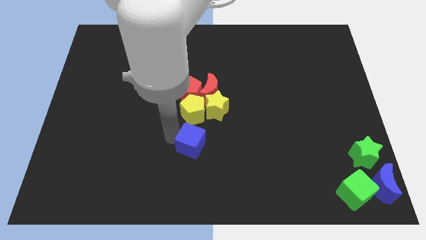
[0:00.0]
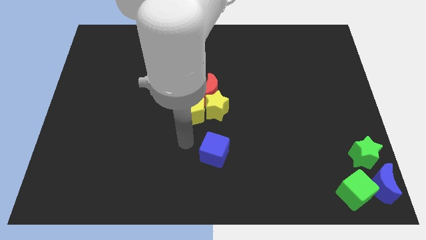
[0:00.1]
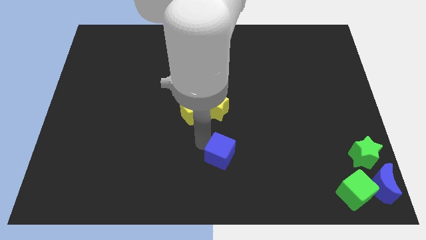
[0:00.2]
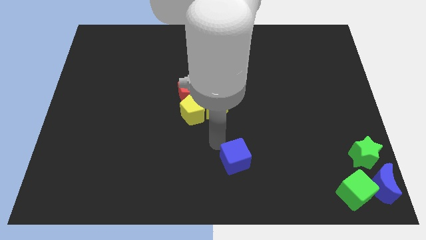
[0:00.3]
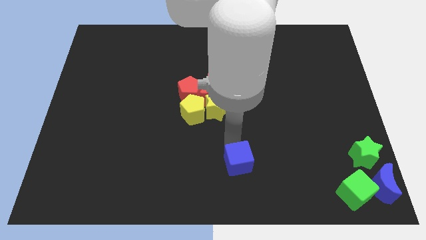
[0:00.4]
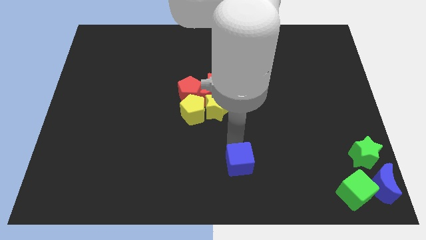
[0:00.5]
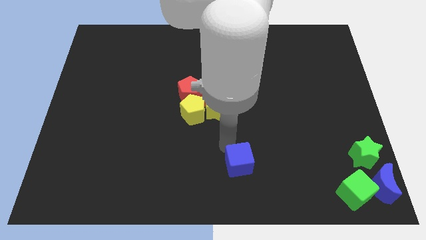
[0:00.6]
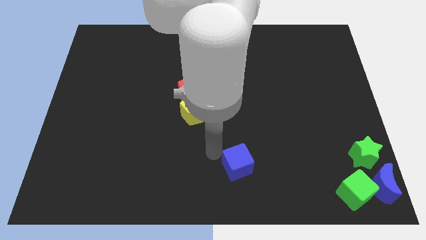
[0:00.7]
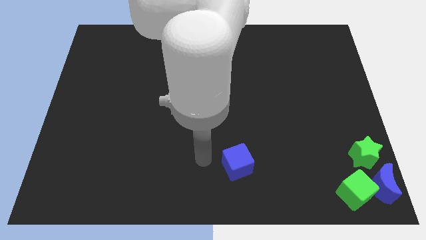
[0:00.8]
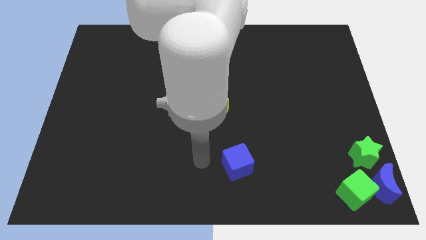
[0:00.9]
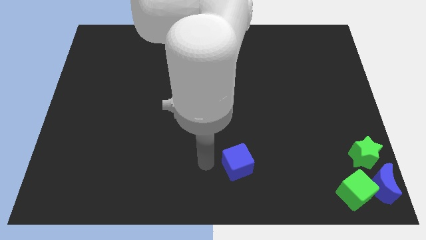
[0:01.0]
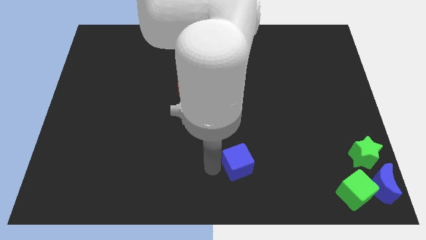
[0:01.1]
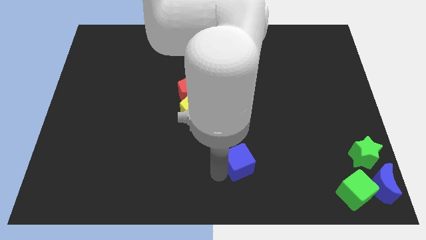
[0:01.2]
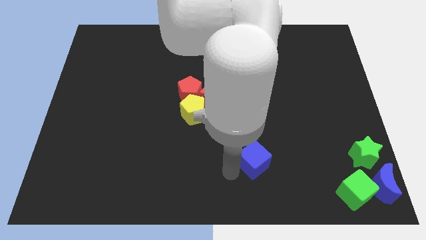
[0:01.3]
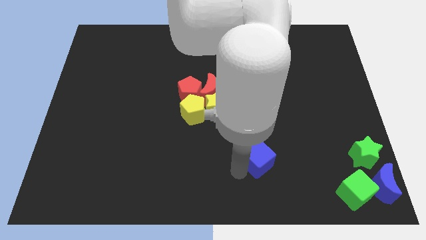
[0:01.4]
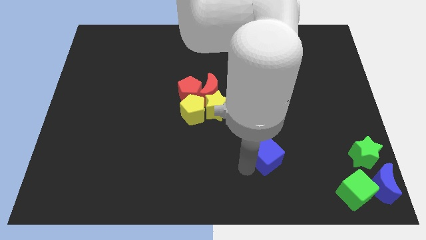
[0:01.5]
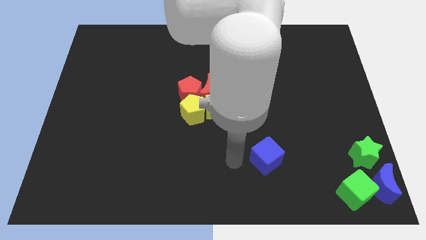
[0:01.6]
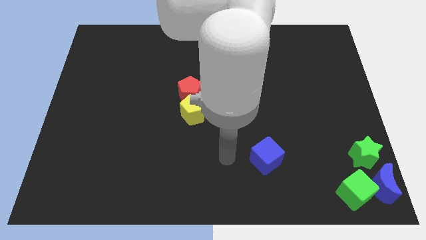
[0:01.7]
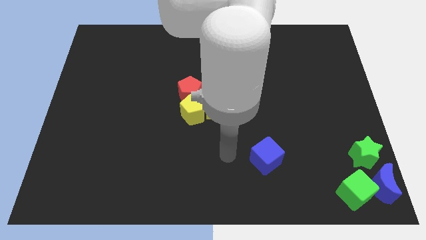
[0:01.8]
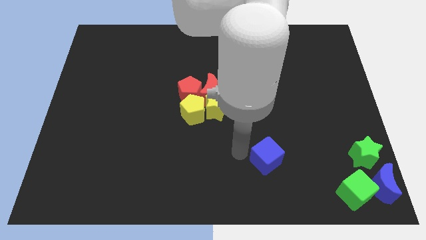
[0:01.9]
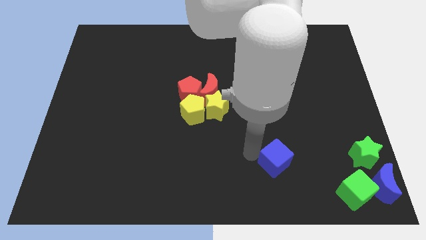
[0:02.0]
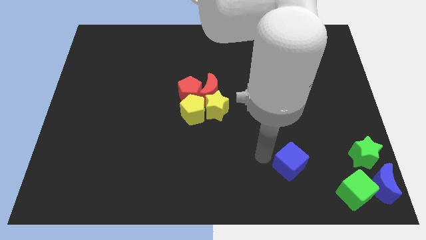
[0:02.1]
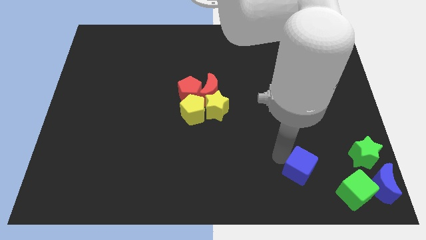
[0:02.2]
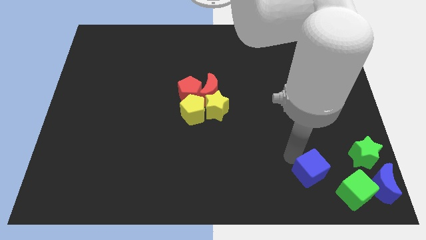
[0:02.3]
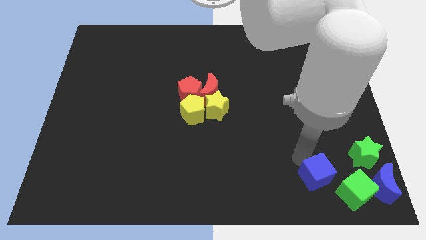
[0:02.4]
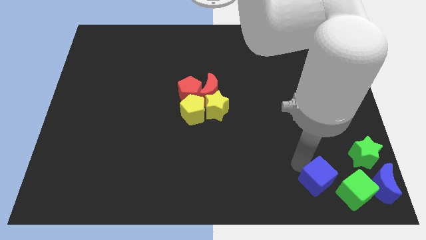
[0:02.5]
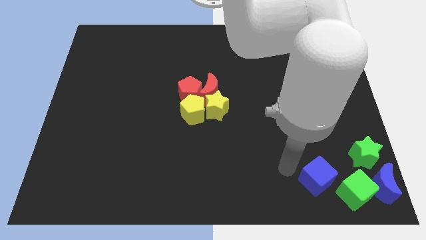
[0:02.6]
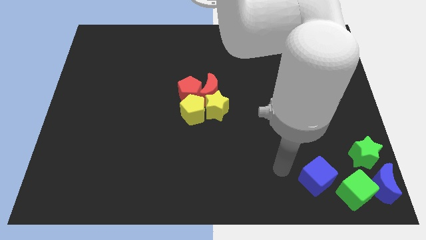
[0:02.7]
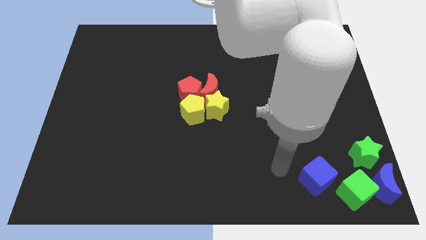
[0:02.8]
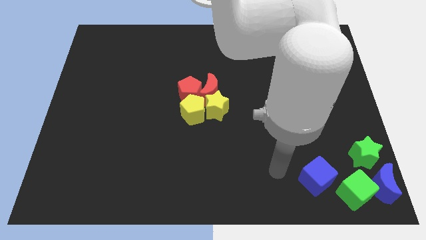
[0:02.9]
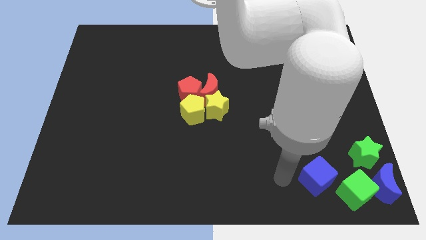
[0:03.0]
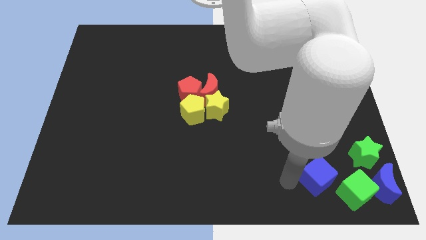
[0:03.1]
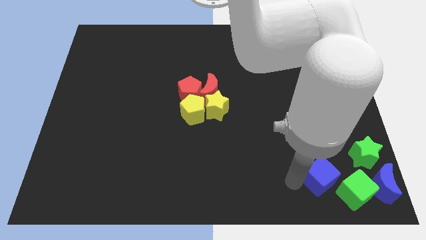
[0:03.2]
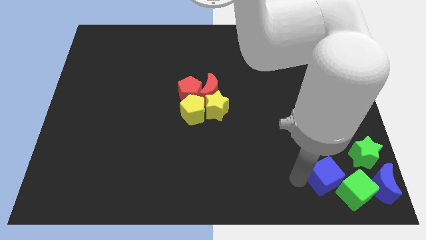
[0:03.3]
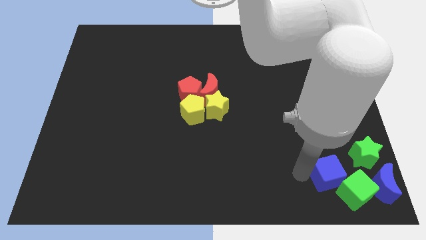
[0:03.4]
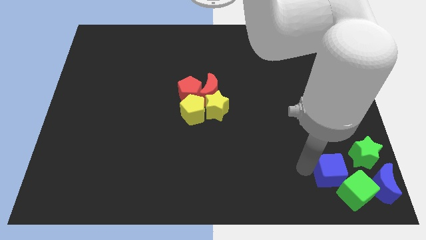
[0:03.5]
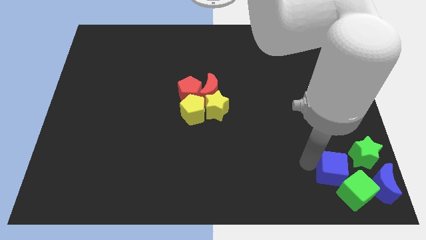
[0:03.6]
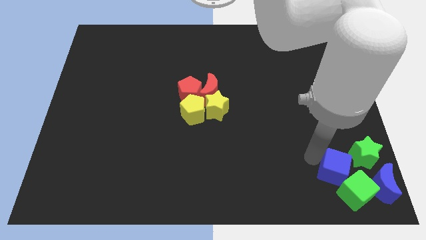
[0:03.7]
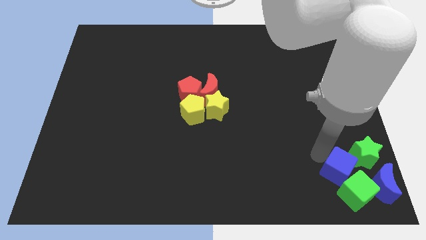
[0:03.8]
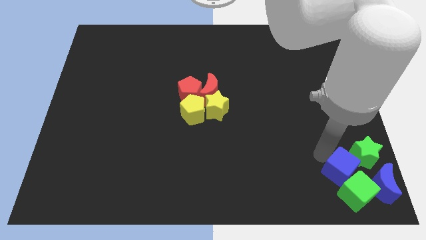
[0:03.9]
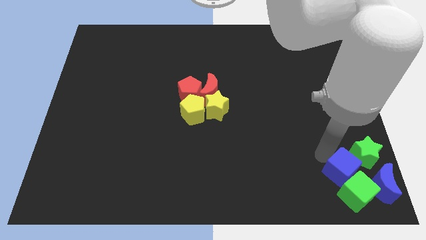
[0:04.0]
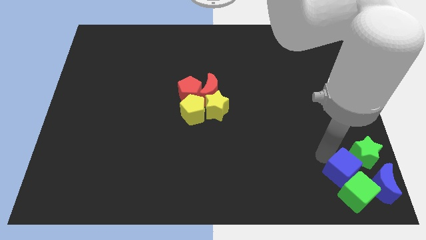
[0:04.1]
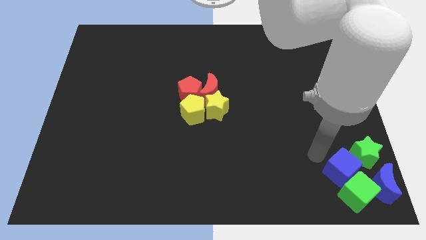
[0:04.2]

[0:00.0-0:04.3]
push the blue cube into the green cube

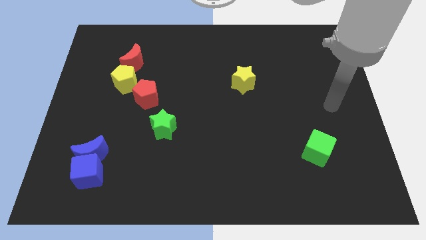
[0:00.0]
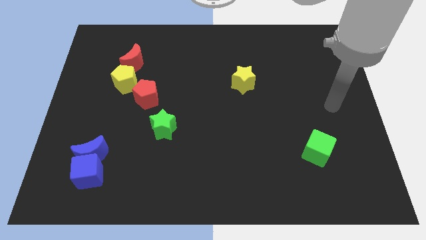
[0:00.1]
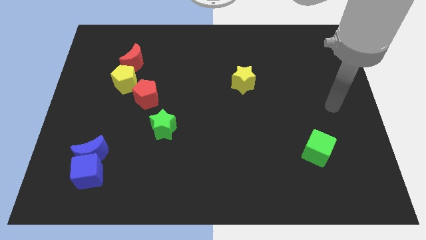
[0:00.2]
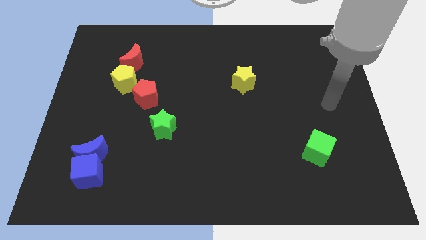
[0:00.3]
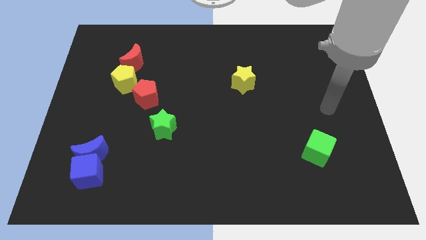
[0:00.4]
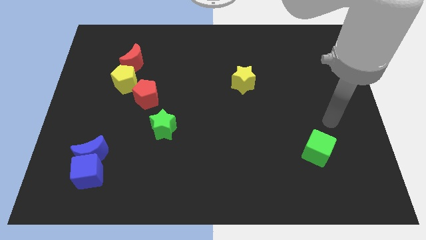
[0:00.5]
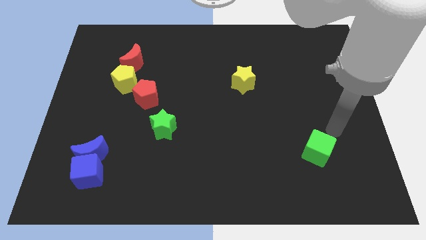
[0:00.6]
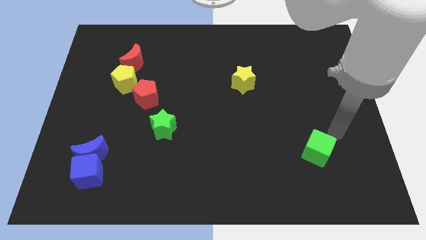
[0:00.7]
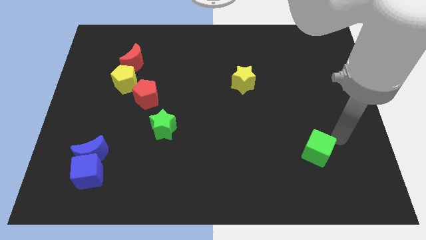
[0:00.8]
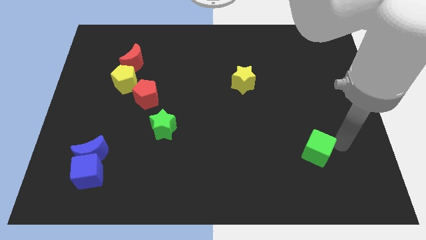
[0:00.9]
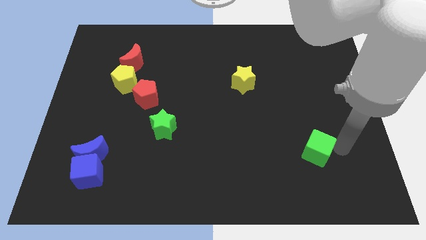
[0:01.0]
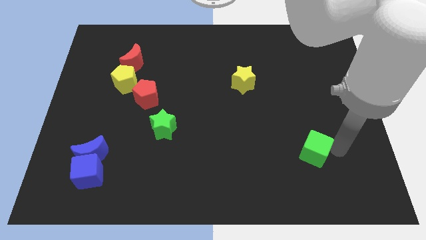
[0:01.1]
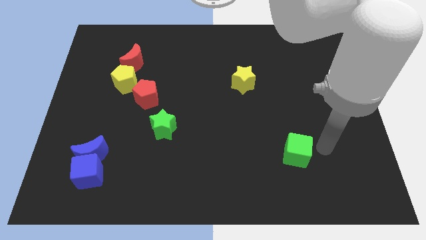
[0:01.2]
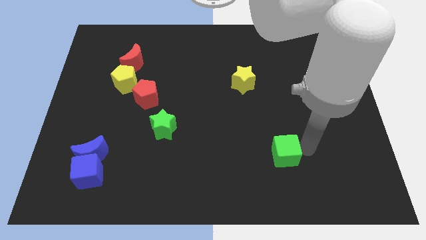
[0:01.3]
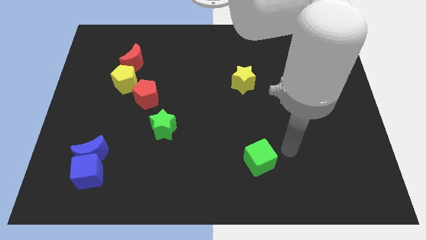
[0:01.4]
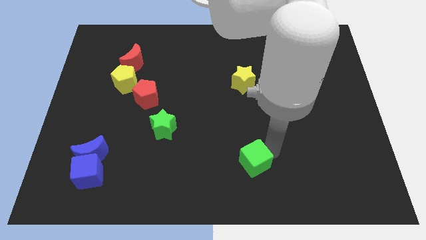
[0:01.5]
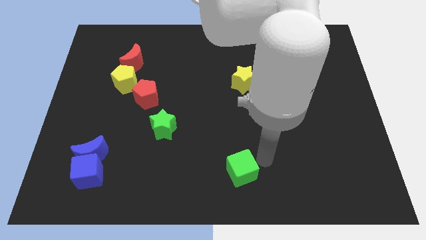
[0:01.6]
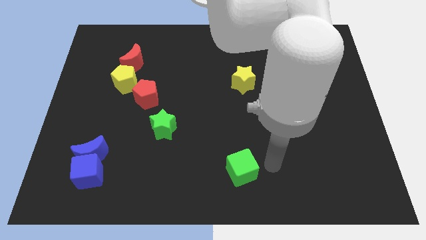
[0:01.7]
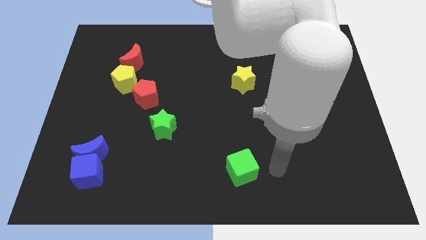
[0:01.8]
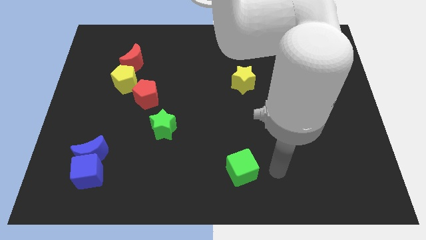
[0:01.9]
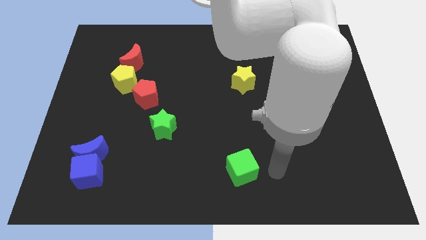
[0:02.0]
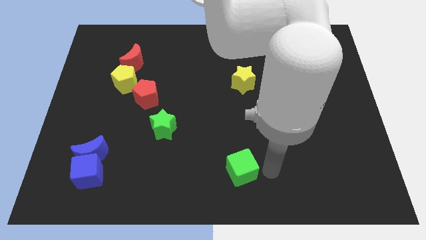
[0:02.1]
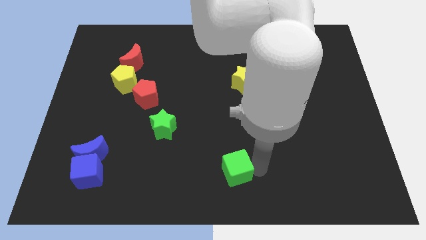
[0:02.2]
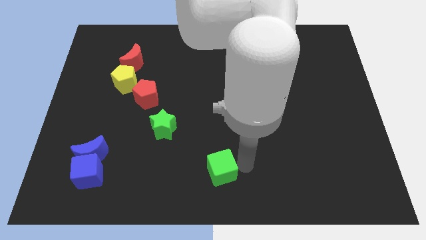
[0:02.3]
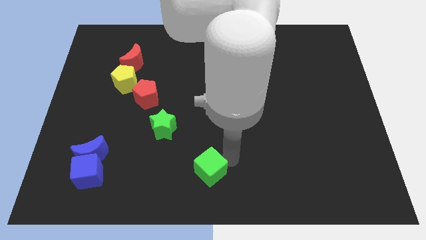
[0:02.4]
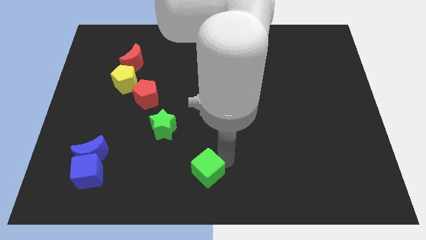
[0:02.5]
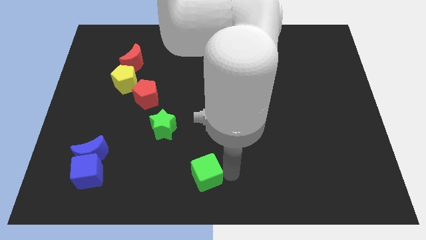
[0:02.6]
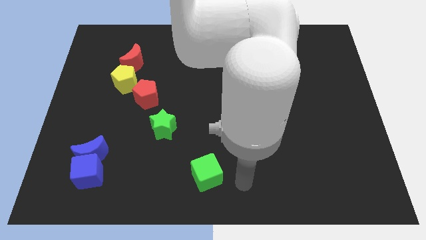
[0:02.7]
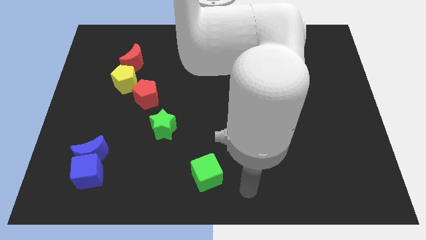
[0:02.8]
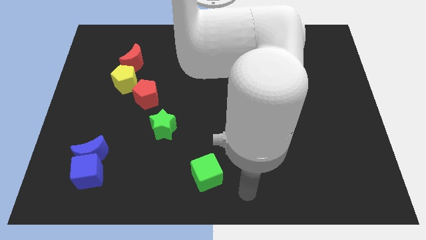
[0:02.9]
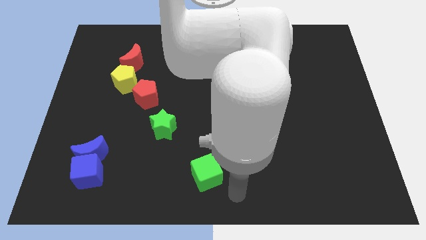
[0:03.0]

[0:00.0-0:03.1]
place the green cube at the bottom right side of the green star

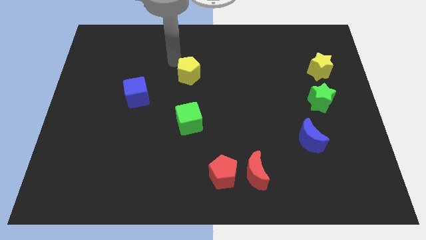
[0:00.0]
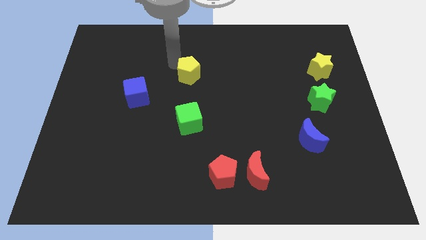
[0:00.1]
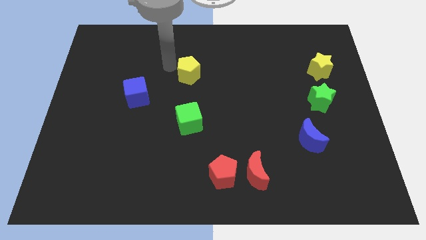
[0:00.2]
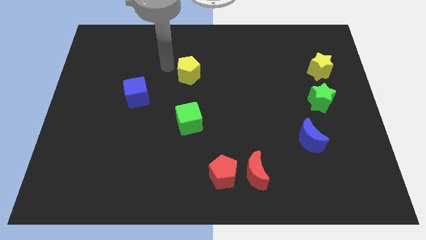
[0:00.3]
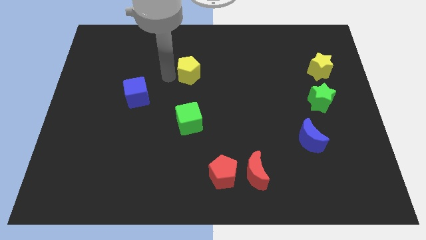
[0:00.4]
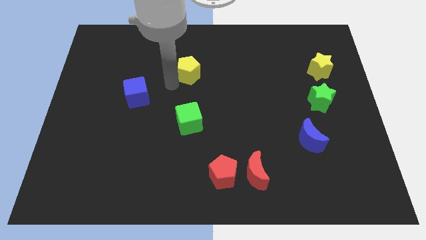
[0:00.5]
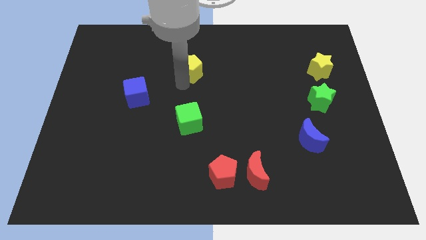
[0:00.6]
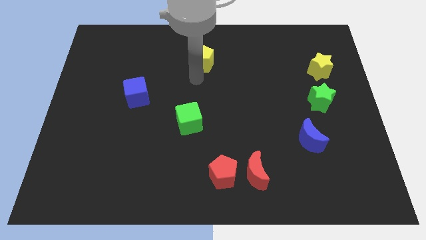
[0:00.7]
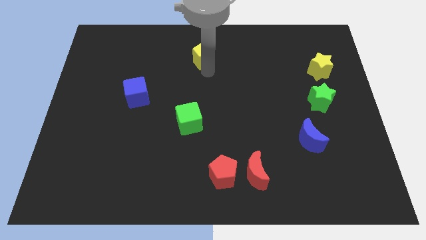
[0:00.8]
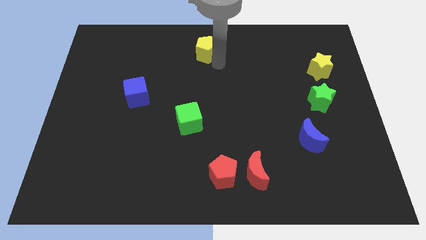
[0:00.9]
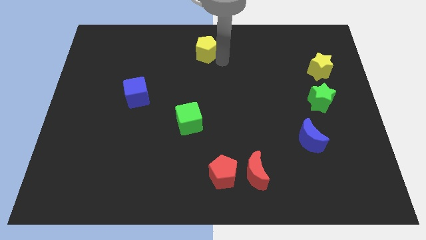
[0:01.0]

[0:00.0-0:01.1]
move yellow pentagon towards top center

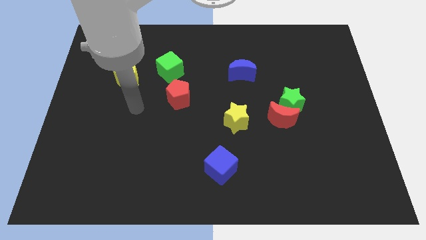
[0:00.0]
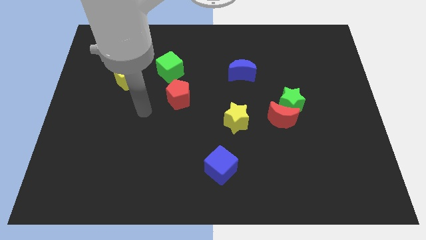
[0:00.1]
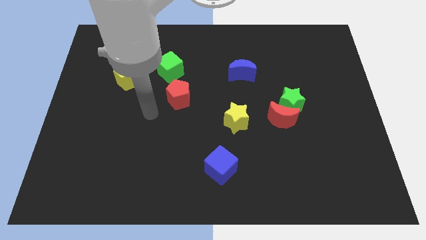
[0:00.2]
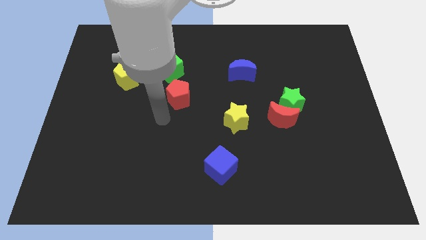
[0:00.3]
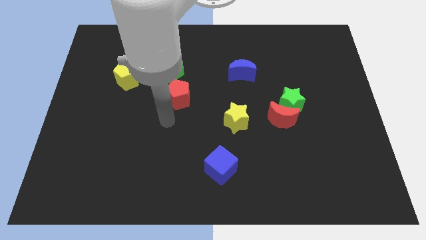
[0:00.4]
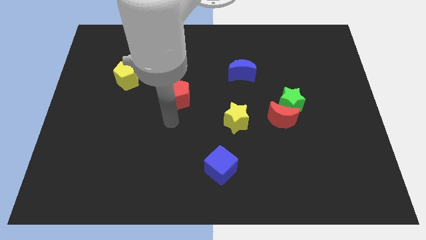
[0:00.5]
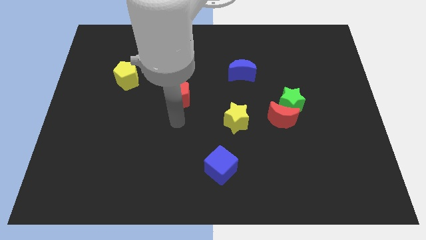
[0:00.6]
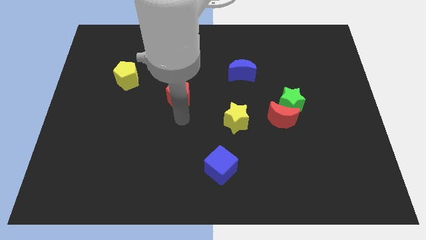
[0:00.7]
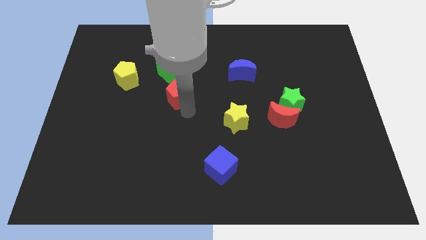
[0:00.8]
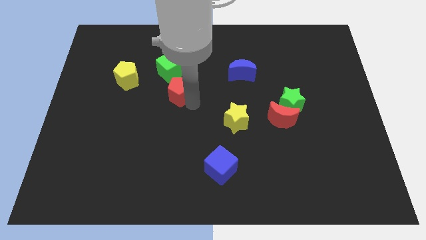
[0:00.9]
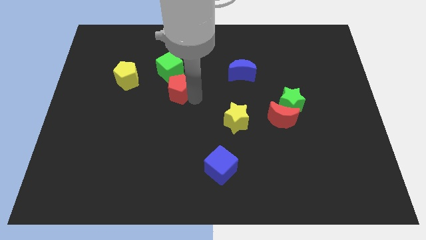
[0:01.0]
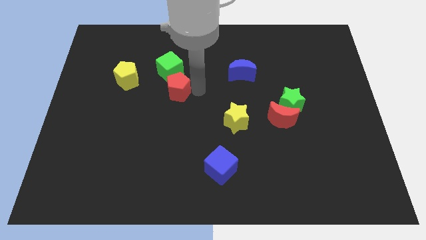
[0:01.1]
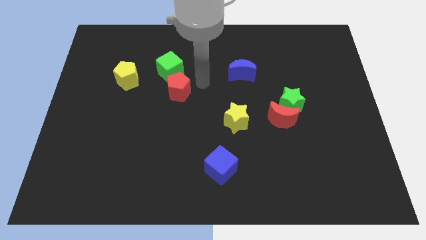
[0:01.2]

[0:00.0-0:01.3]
touch the red pentagon
